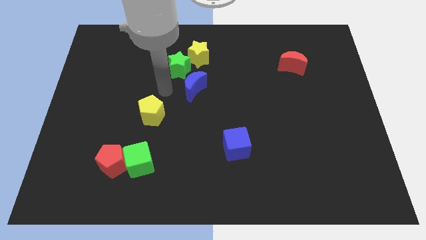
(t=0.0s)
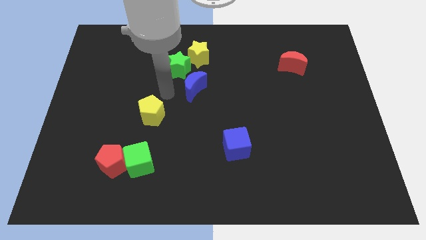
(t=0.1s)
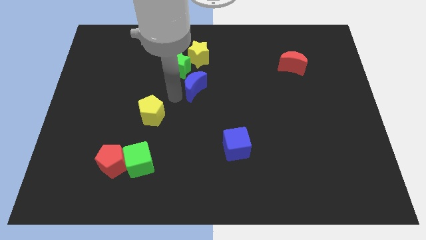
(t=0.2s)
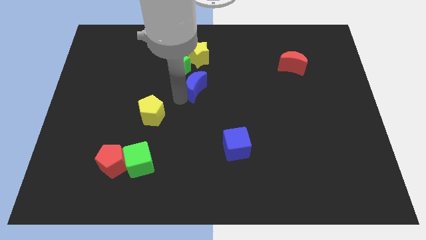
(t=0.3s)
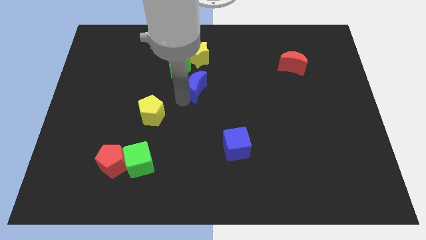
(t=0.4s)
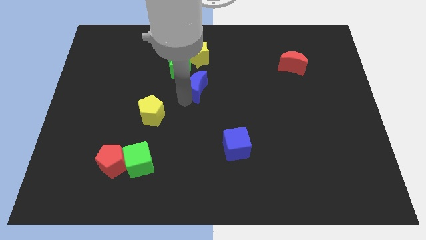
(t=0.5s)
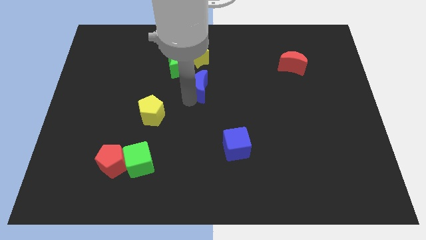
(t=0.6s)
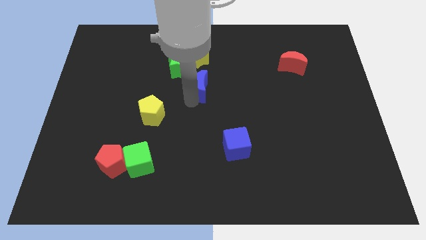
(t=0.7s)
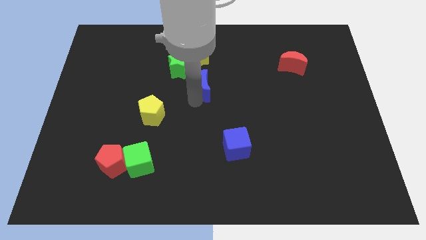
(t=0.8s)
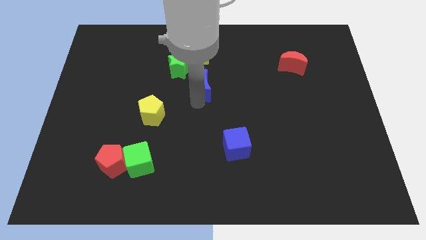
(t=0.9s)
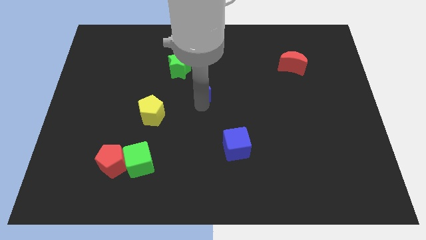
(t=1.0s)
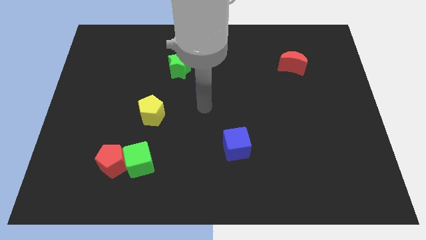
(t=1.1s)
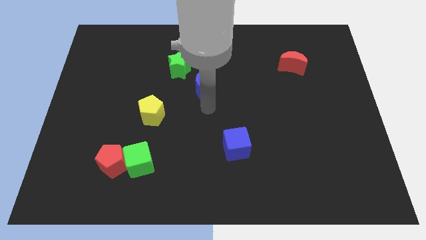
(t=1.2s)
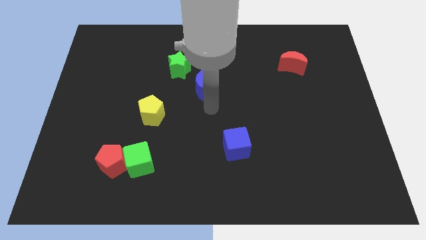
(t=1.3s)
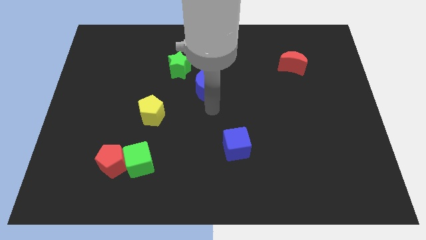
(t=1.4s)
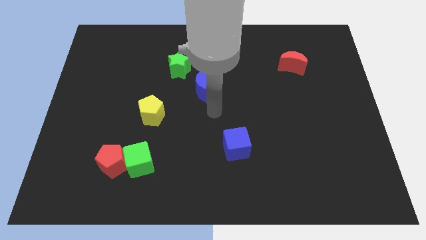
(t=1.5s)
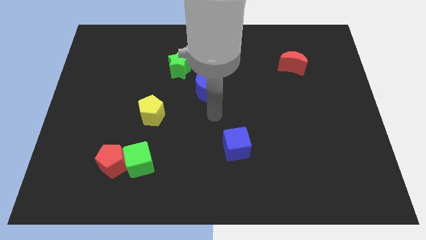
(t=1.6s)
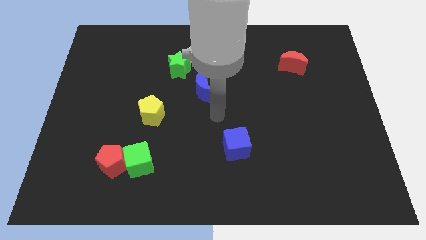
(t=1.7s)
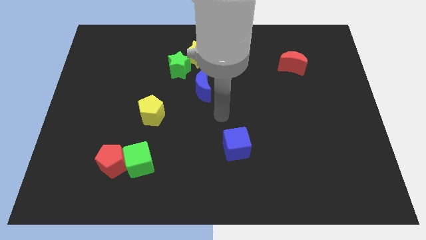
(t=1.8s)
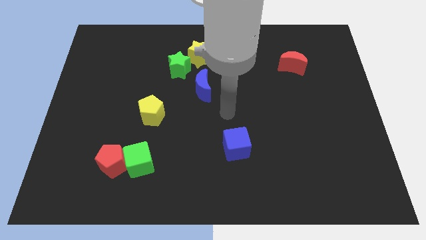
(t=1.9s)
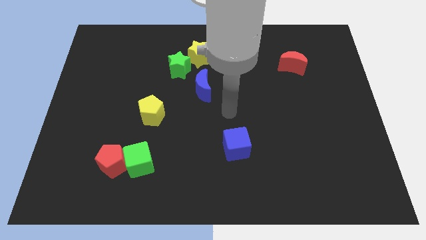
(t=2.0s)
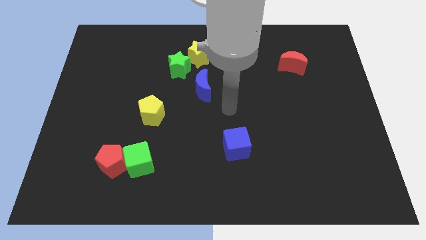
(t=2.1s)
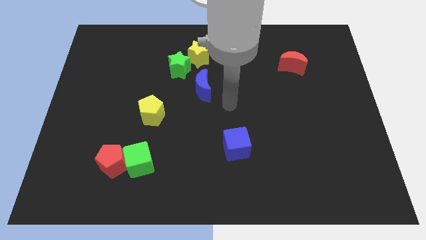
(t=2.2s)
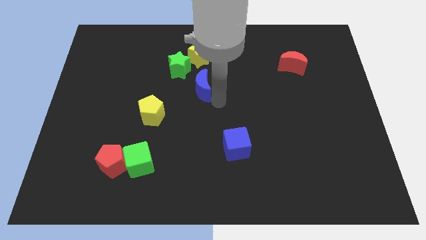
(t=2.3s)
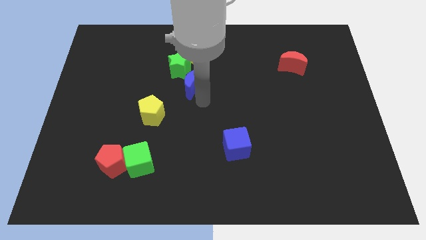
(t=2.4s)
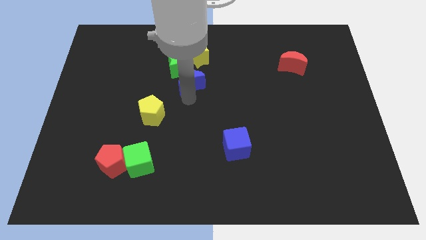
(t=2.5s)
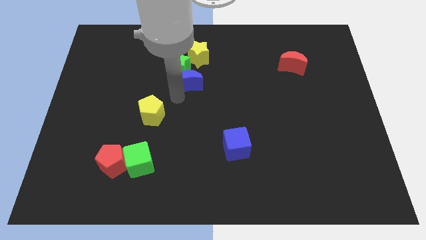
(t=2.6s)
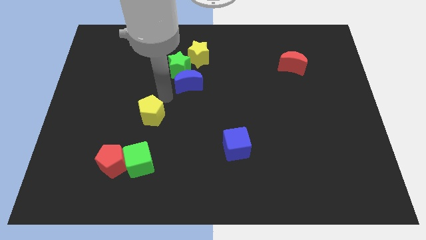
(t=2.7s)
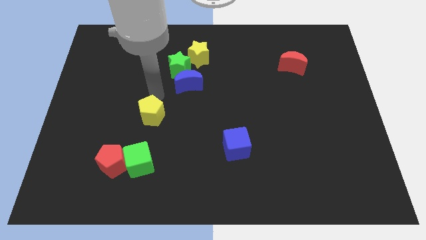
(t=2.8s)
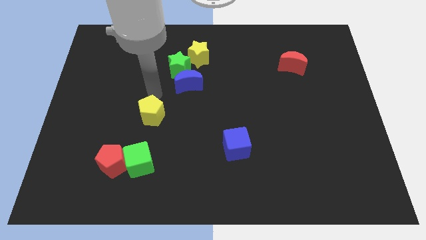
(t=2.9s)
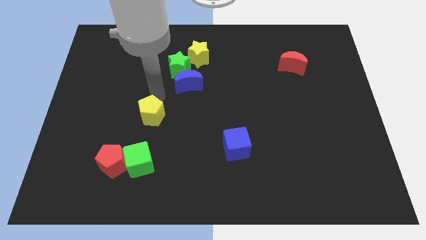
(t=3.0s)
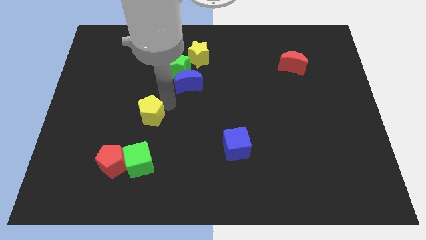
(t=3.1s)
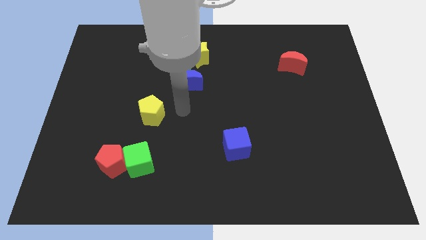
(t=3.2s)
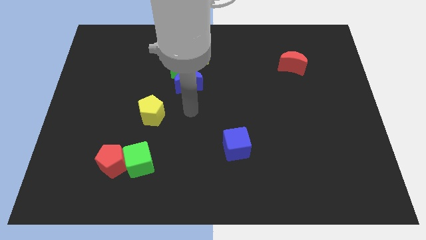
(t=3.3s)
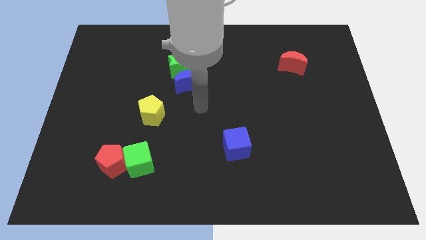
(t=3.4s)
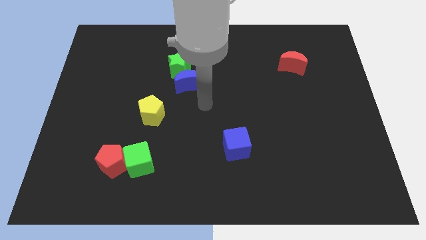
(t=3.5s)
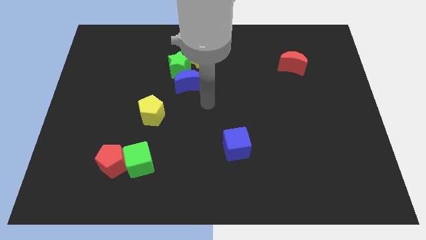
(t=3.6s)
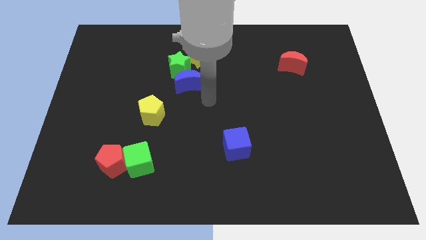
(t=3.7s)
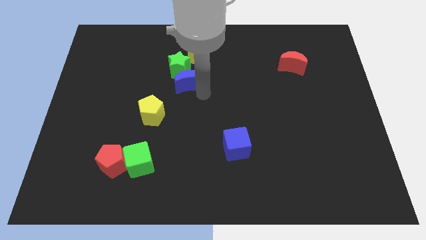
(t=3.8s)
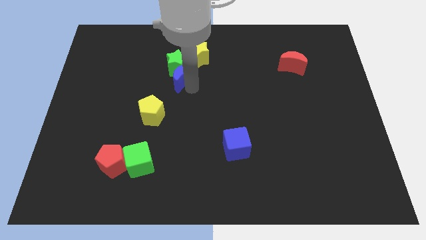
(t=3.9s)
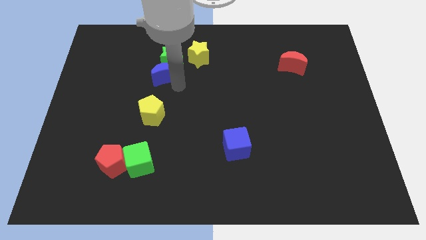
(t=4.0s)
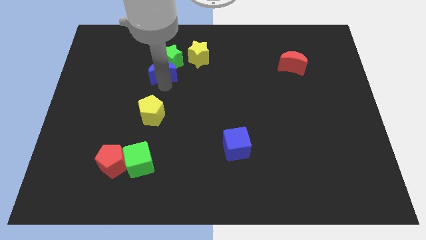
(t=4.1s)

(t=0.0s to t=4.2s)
place the blue crescent below the green star

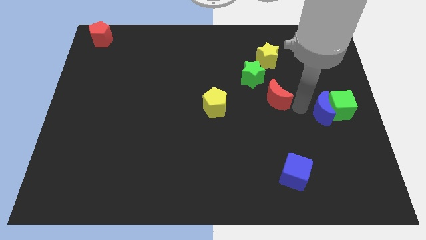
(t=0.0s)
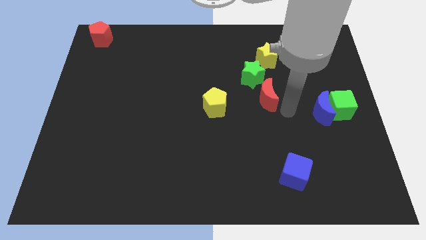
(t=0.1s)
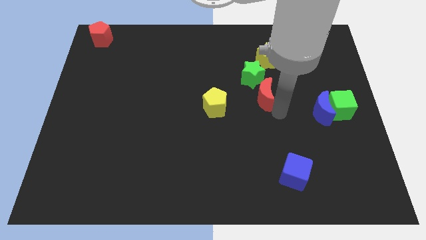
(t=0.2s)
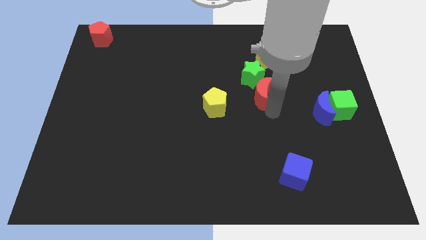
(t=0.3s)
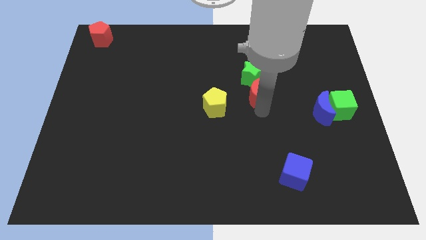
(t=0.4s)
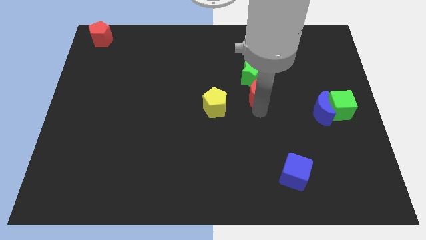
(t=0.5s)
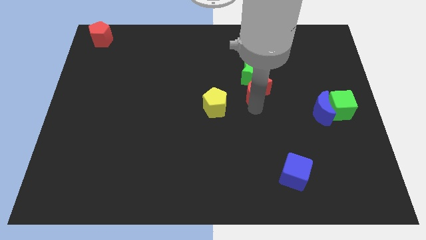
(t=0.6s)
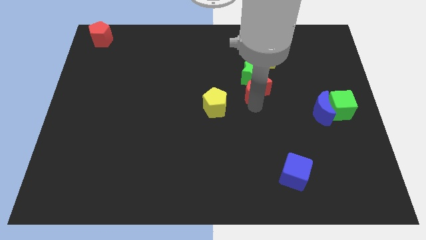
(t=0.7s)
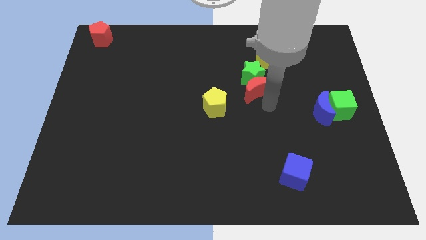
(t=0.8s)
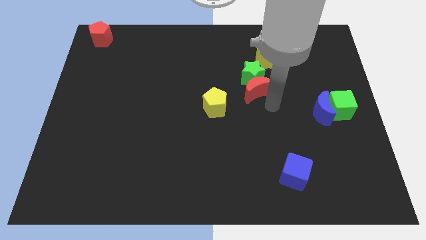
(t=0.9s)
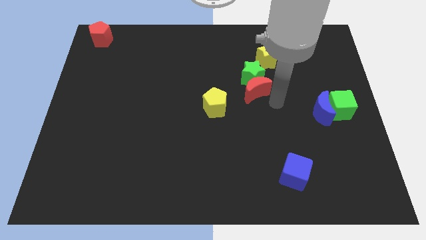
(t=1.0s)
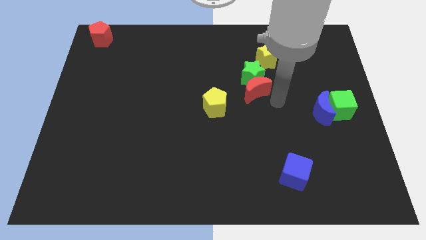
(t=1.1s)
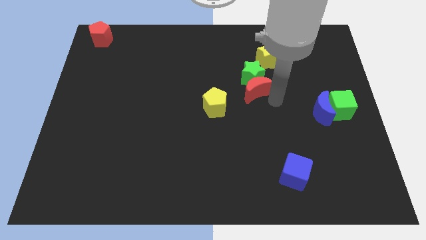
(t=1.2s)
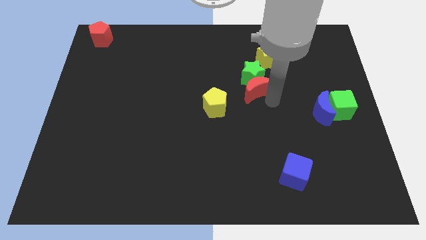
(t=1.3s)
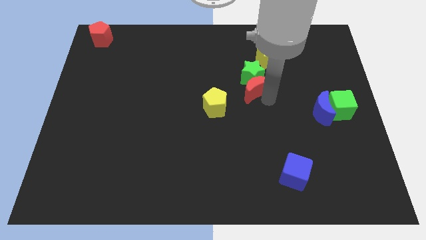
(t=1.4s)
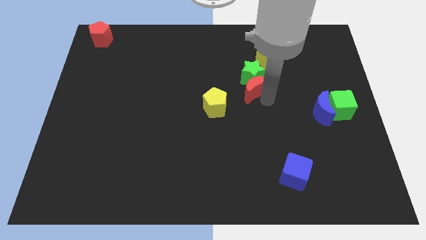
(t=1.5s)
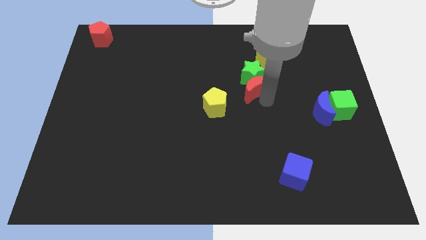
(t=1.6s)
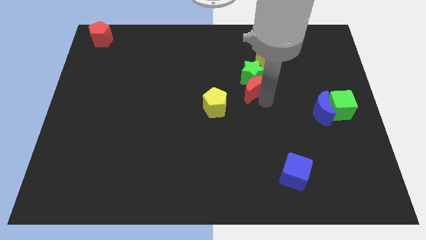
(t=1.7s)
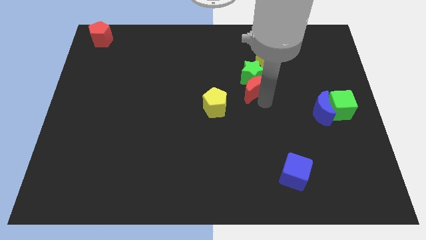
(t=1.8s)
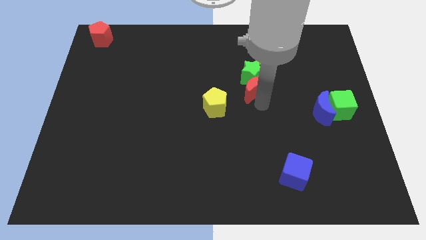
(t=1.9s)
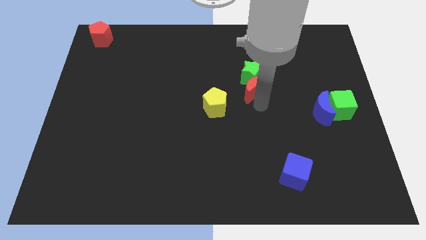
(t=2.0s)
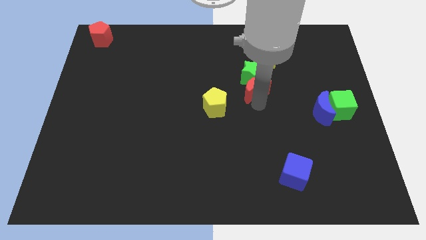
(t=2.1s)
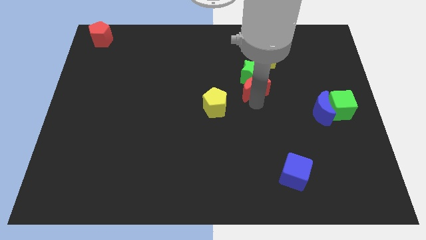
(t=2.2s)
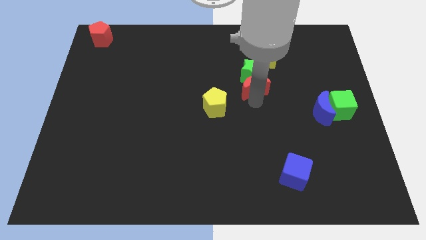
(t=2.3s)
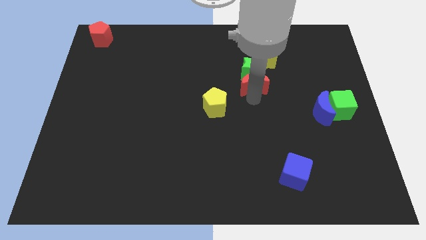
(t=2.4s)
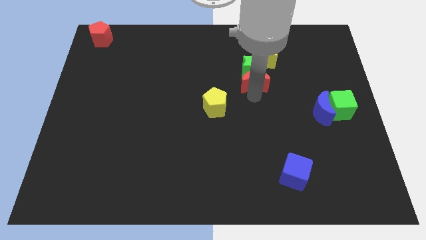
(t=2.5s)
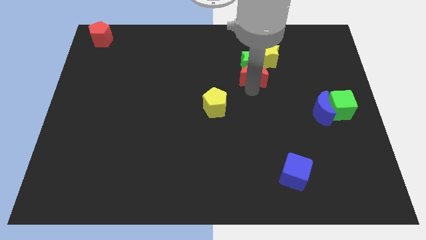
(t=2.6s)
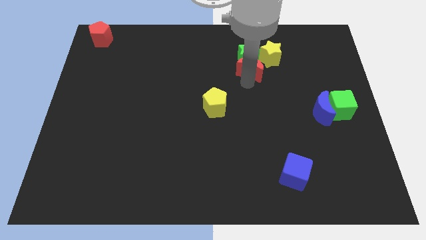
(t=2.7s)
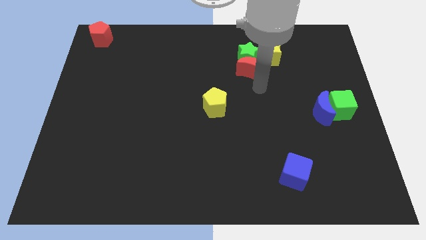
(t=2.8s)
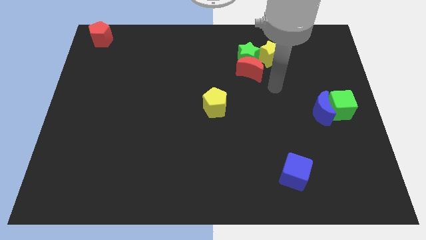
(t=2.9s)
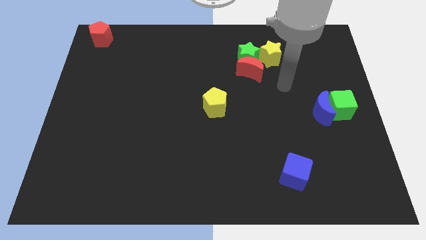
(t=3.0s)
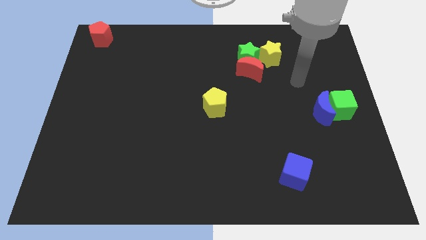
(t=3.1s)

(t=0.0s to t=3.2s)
drag the yellow star green star red moon towards top side

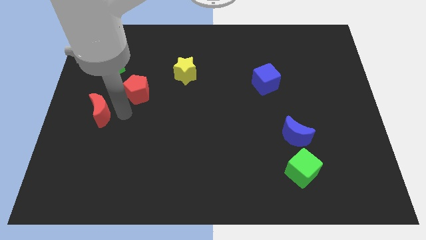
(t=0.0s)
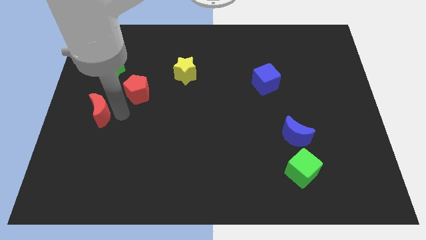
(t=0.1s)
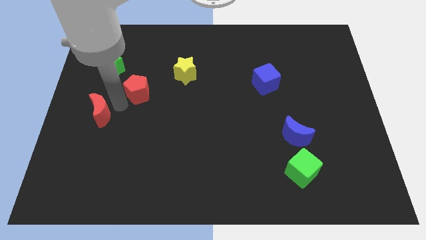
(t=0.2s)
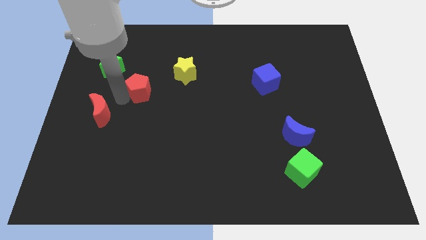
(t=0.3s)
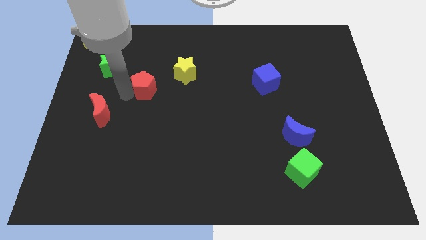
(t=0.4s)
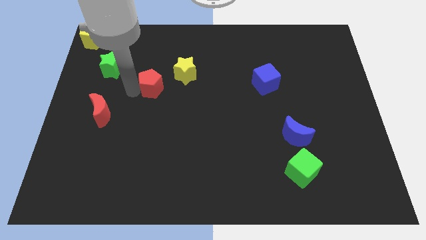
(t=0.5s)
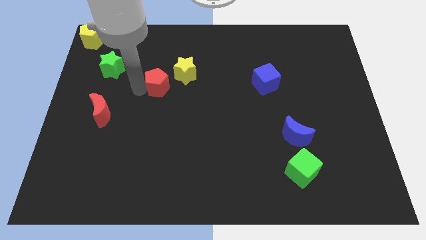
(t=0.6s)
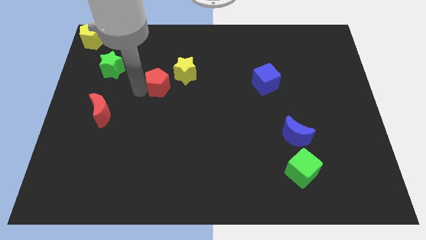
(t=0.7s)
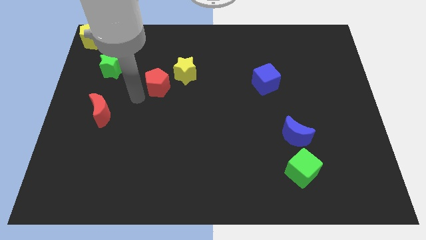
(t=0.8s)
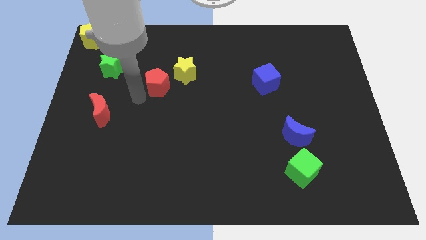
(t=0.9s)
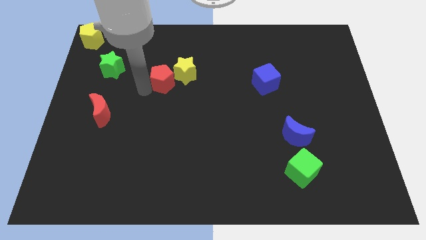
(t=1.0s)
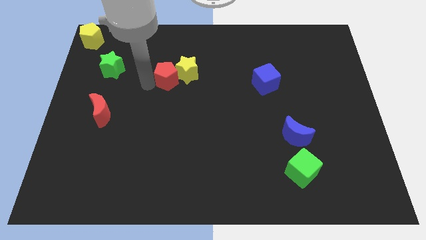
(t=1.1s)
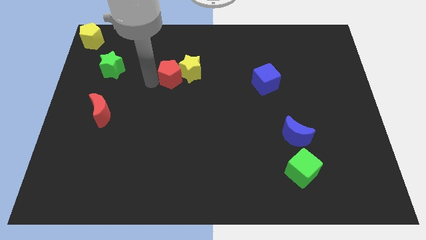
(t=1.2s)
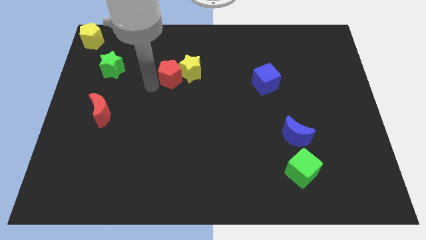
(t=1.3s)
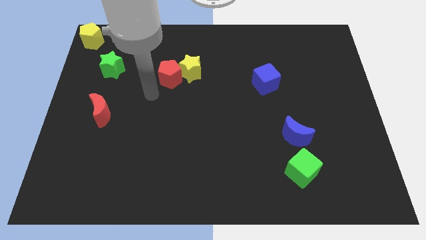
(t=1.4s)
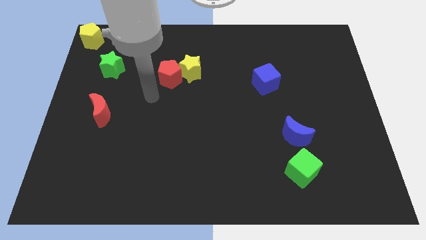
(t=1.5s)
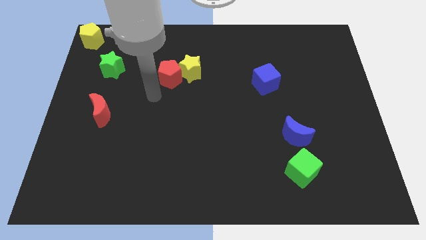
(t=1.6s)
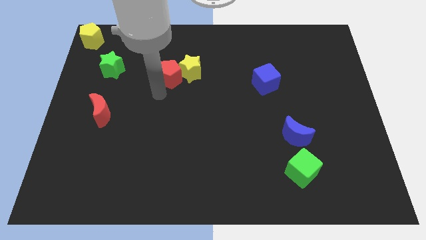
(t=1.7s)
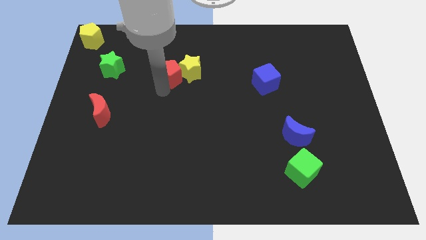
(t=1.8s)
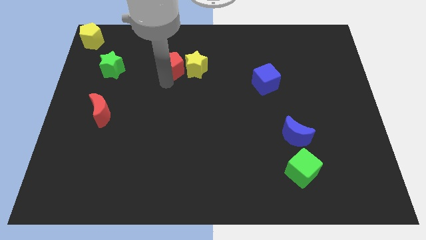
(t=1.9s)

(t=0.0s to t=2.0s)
place the red pentagon to the left of the yellow star
